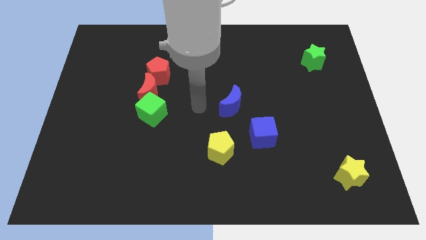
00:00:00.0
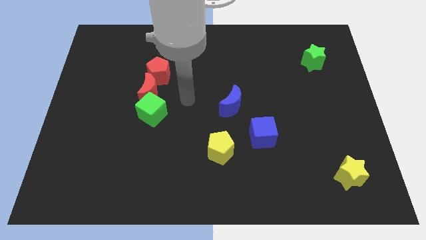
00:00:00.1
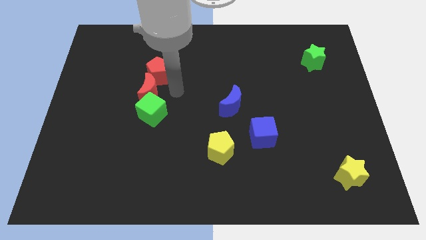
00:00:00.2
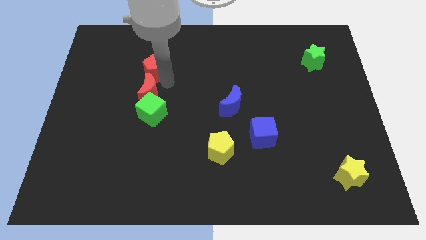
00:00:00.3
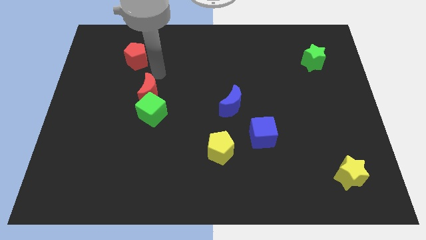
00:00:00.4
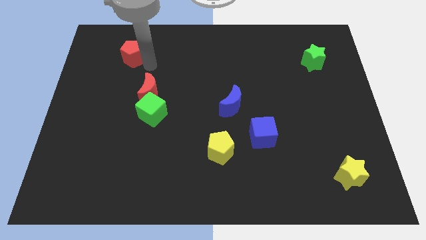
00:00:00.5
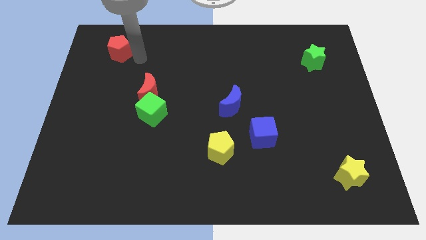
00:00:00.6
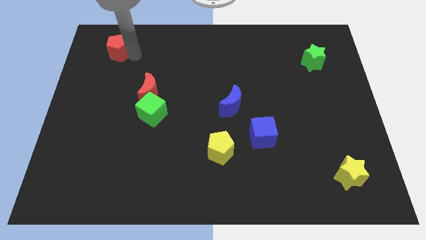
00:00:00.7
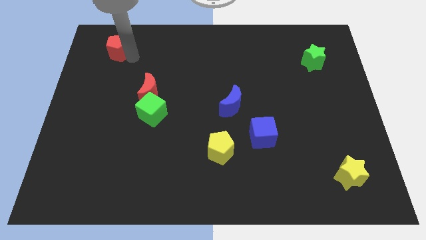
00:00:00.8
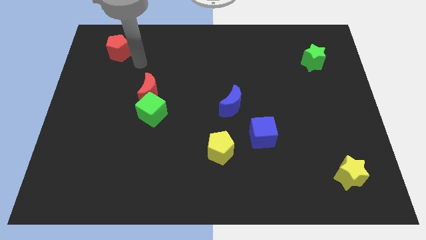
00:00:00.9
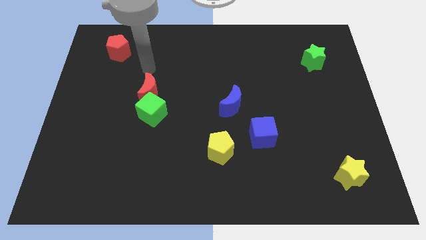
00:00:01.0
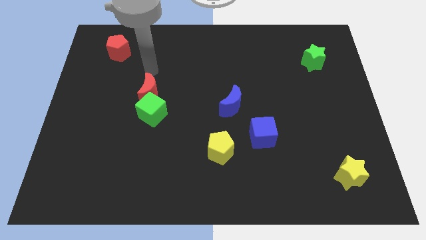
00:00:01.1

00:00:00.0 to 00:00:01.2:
move the red pentagon to the top left

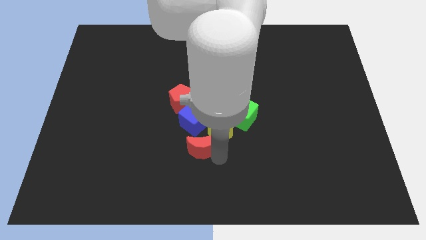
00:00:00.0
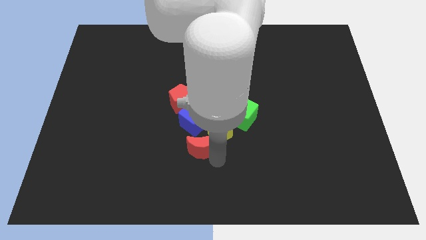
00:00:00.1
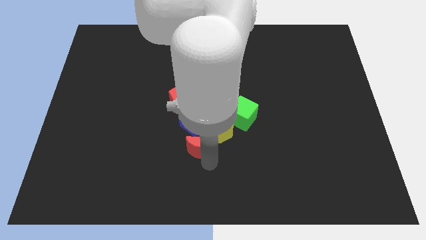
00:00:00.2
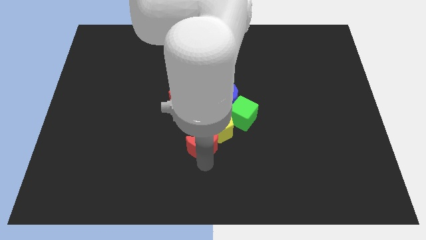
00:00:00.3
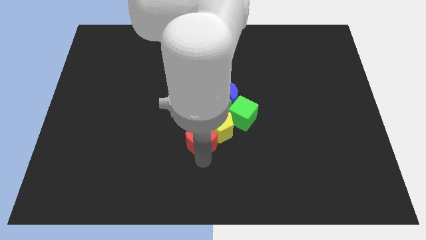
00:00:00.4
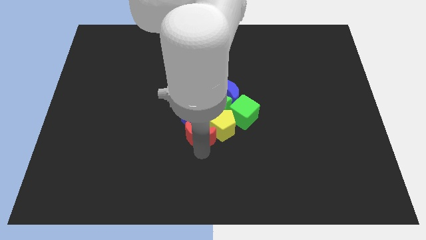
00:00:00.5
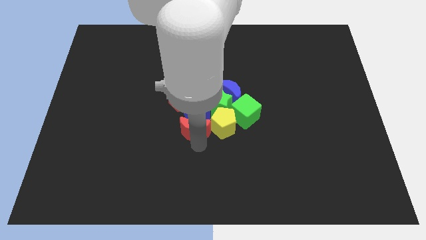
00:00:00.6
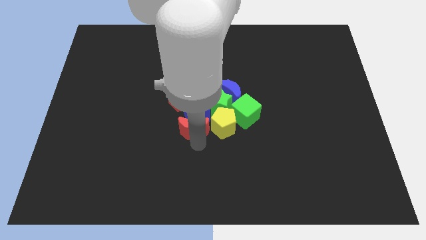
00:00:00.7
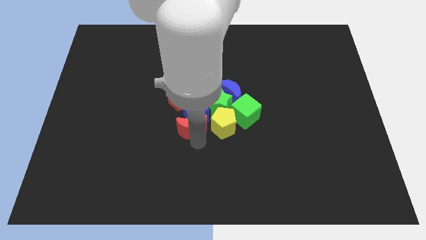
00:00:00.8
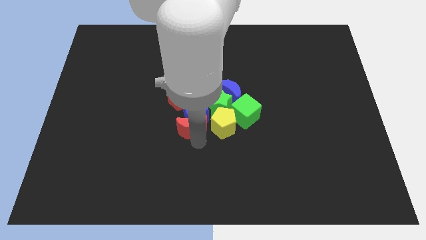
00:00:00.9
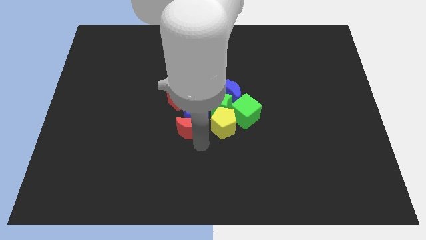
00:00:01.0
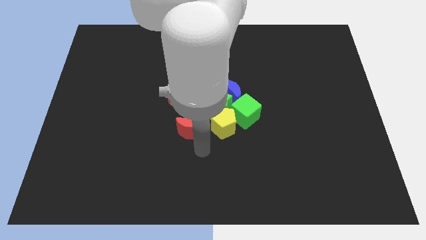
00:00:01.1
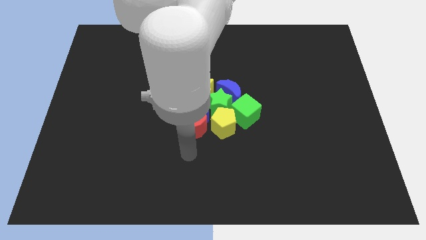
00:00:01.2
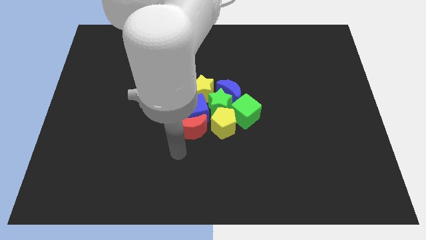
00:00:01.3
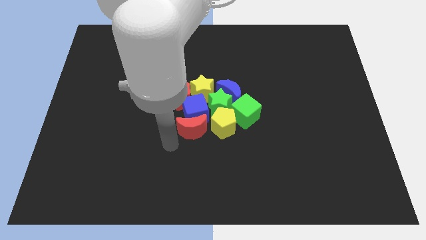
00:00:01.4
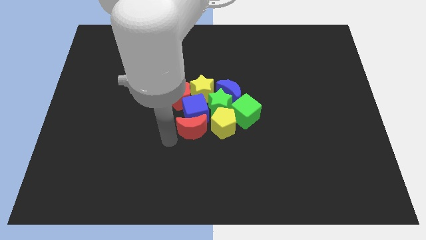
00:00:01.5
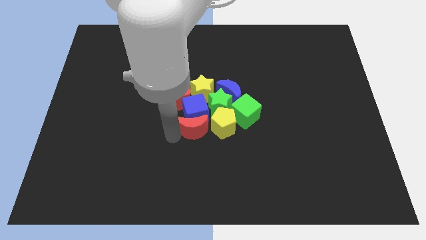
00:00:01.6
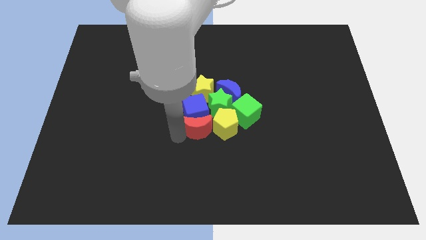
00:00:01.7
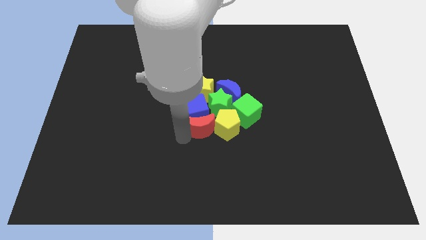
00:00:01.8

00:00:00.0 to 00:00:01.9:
move the red moon into the yellow pentagon

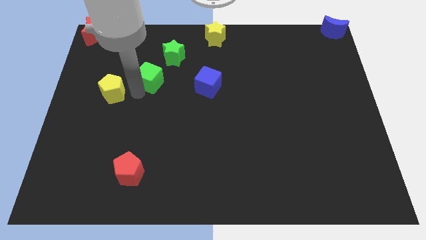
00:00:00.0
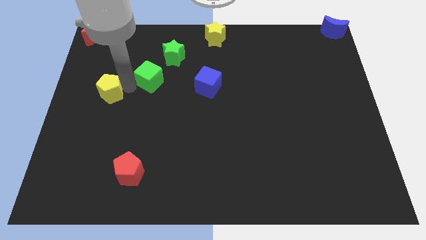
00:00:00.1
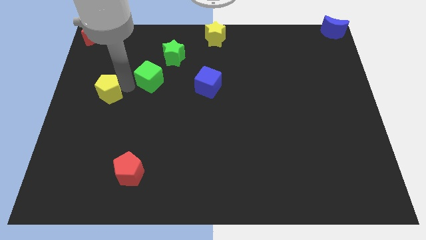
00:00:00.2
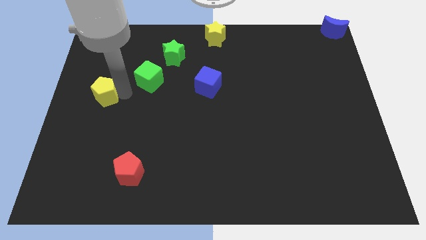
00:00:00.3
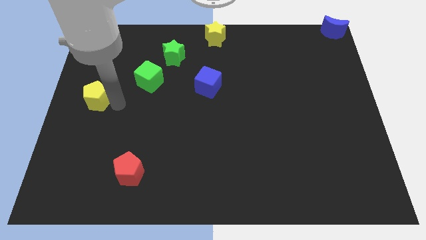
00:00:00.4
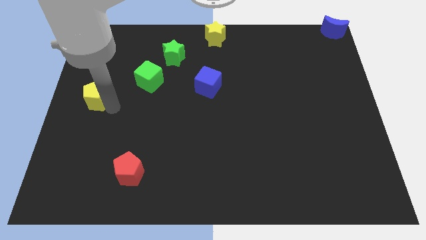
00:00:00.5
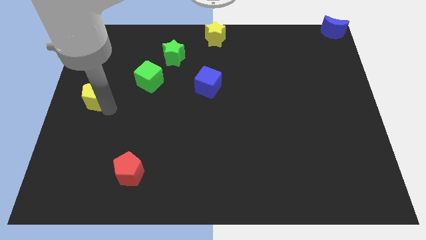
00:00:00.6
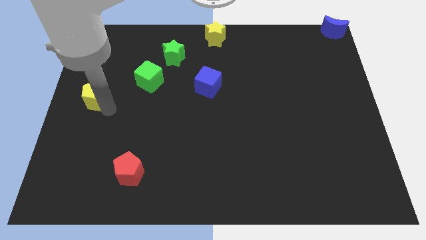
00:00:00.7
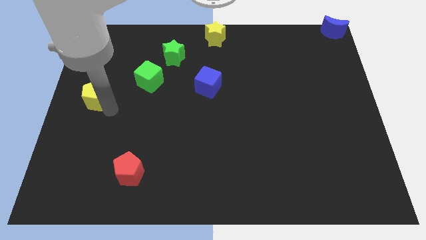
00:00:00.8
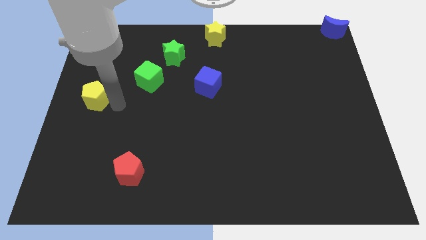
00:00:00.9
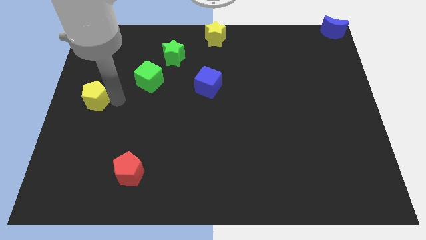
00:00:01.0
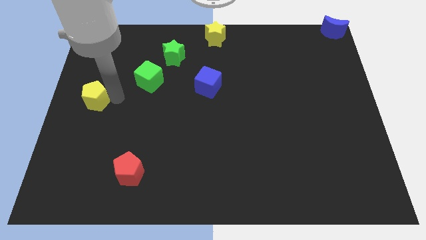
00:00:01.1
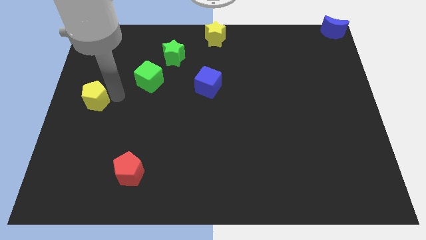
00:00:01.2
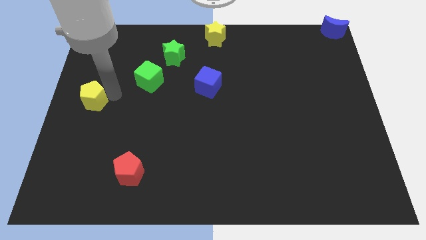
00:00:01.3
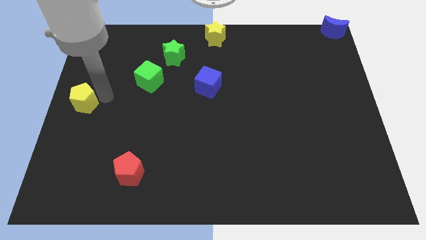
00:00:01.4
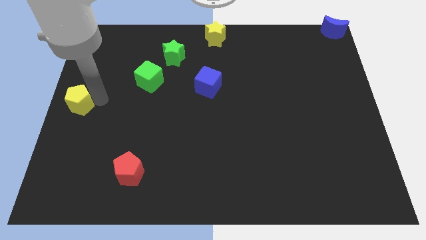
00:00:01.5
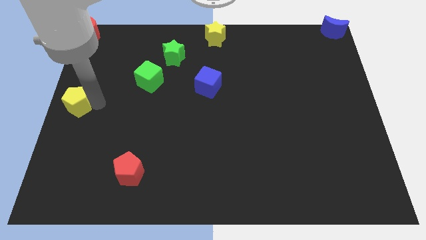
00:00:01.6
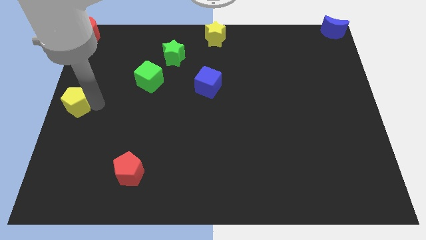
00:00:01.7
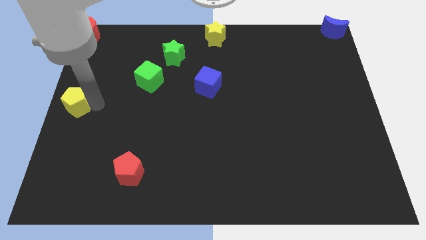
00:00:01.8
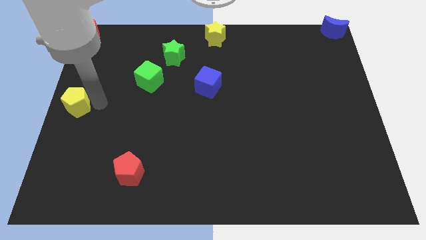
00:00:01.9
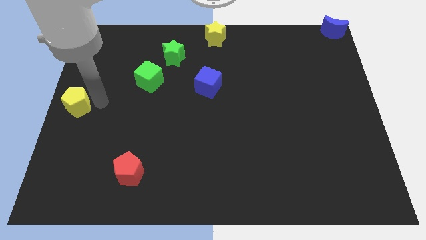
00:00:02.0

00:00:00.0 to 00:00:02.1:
move the yellow pentagon diagonal to the red pentagon

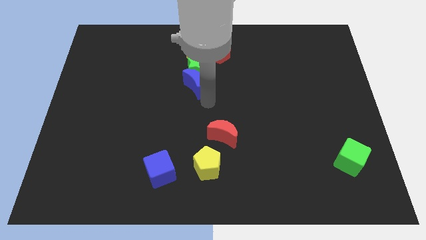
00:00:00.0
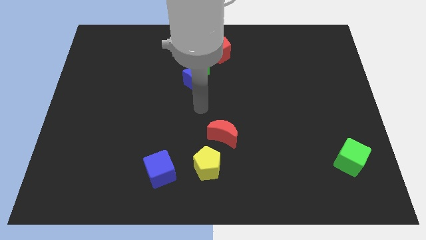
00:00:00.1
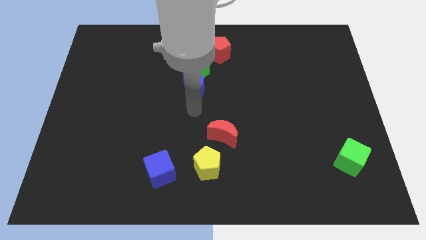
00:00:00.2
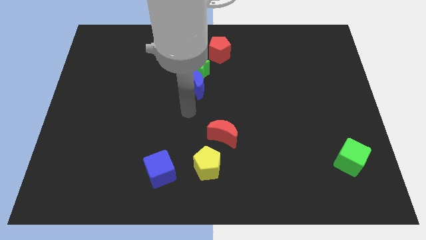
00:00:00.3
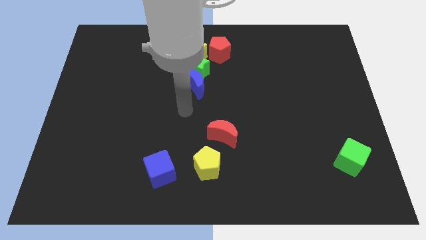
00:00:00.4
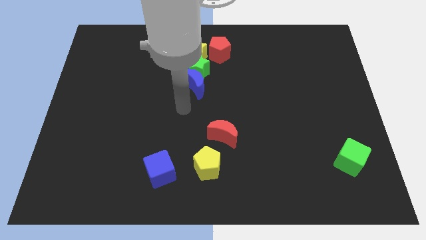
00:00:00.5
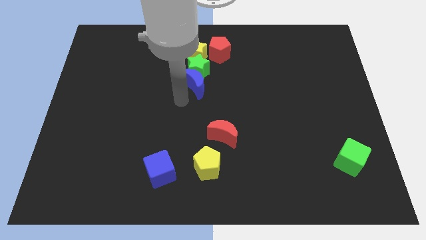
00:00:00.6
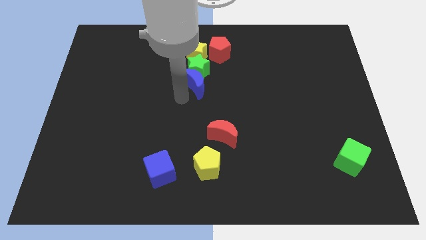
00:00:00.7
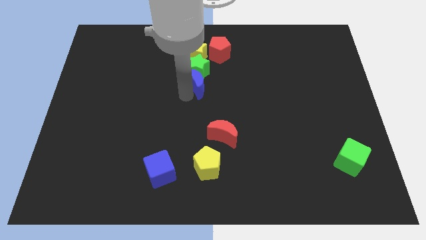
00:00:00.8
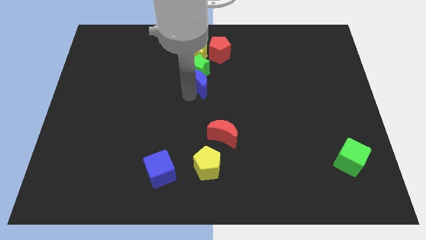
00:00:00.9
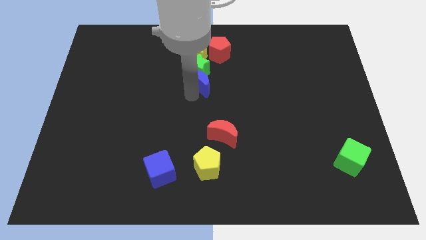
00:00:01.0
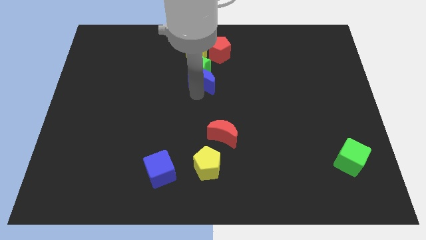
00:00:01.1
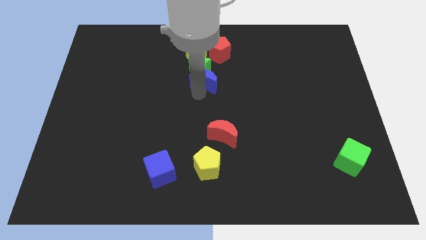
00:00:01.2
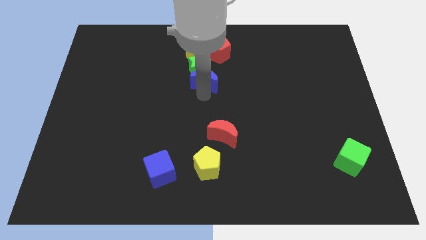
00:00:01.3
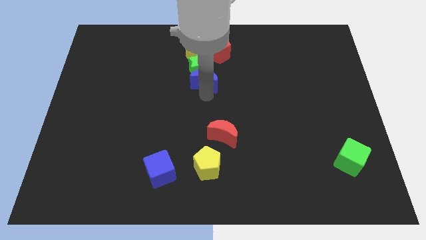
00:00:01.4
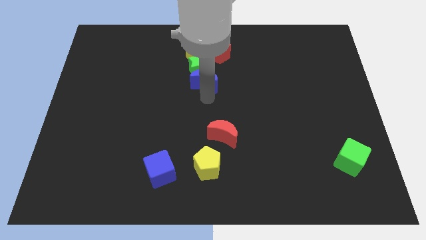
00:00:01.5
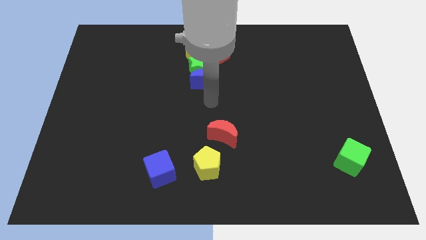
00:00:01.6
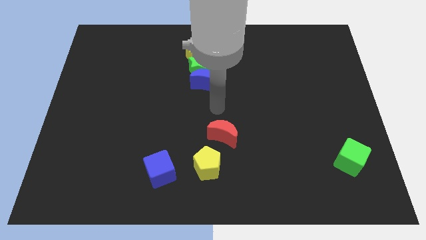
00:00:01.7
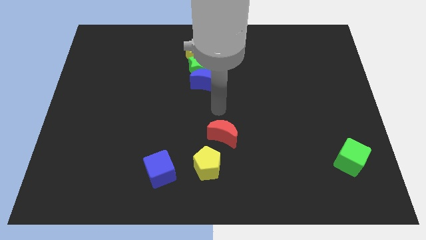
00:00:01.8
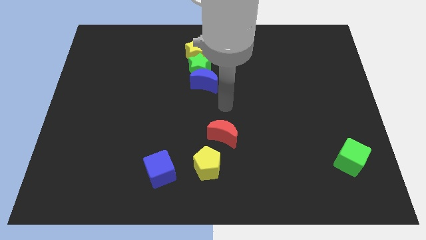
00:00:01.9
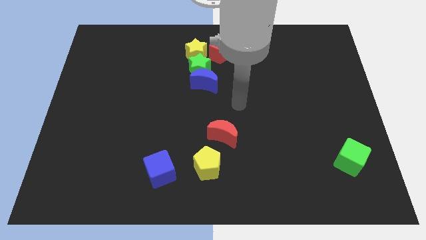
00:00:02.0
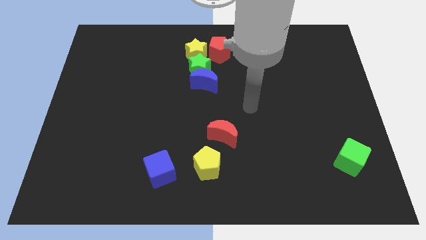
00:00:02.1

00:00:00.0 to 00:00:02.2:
adjust the blue crescent diagonally to green cube

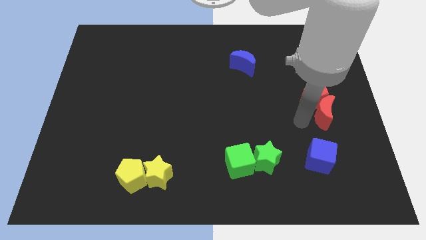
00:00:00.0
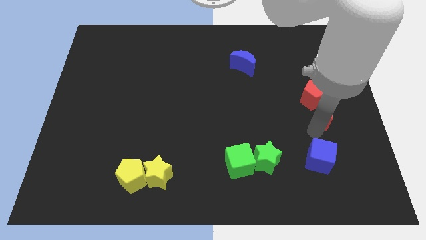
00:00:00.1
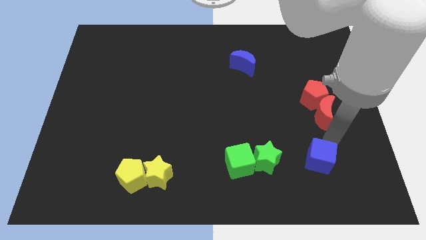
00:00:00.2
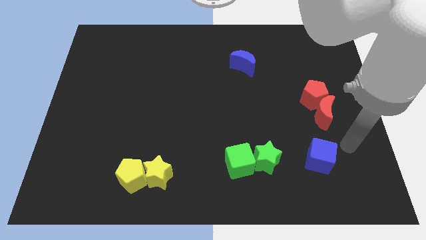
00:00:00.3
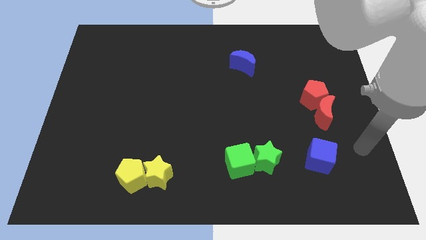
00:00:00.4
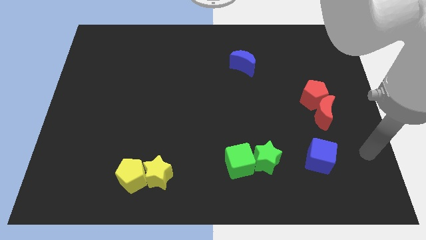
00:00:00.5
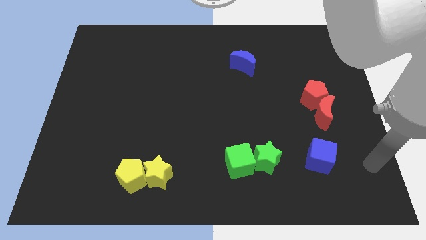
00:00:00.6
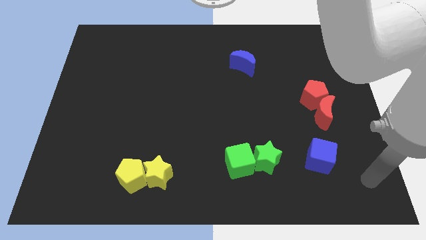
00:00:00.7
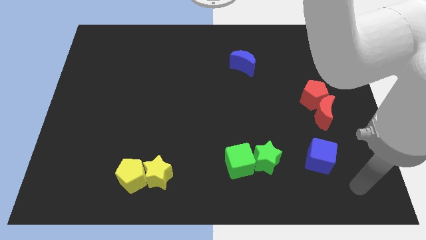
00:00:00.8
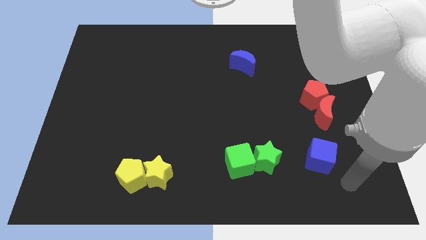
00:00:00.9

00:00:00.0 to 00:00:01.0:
point the arm to the bottom right of the blue cube

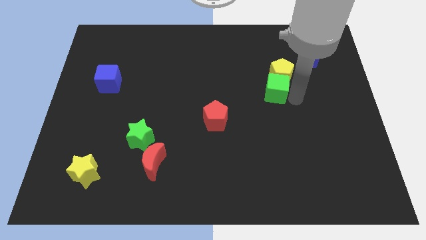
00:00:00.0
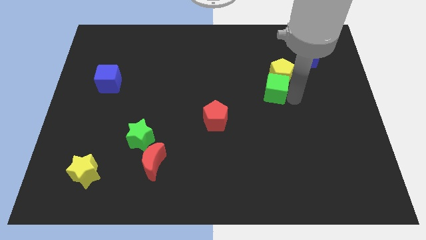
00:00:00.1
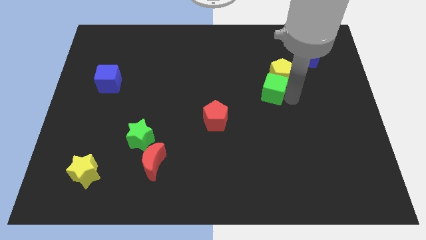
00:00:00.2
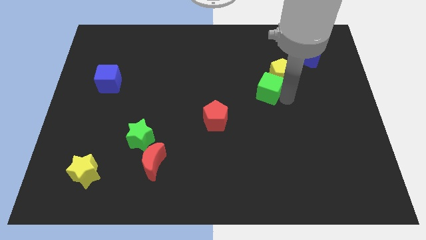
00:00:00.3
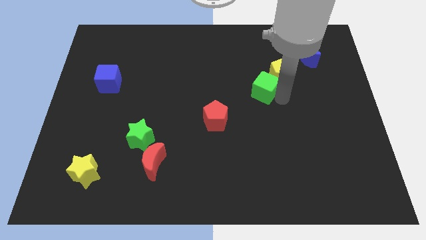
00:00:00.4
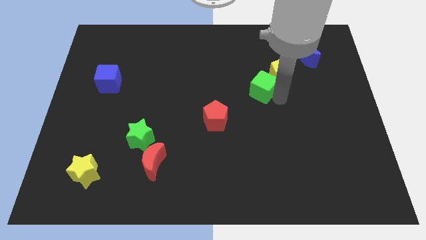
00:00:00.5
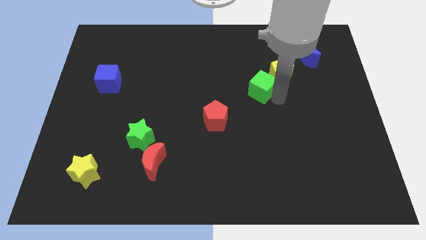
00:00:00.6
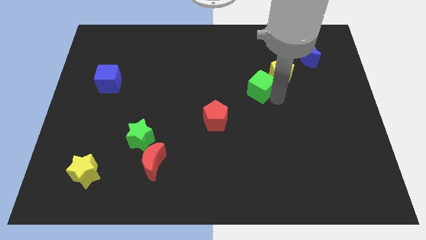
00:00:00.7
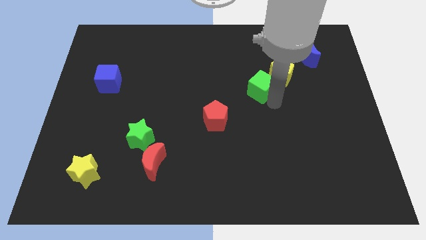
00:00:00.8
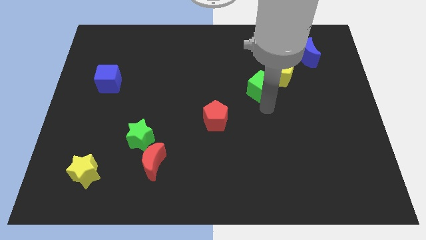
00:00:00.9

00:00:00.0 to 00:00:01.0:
move the green cube to the bottom left of the yellow pentagon
